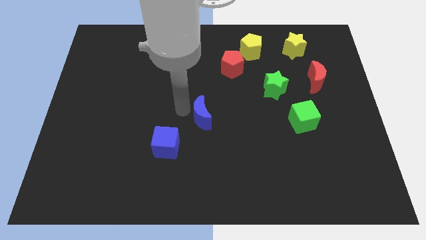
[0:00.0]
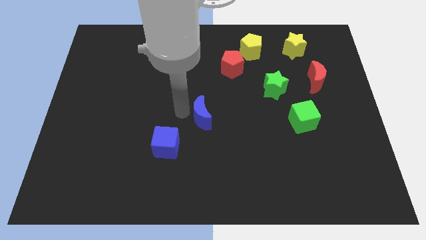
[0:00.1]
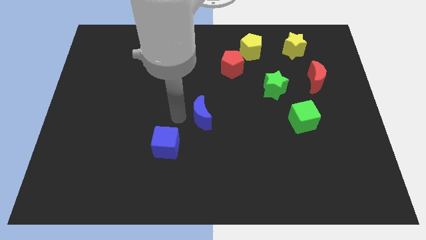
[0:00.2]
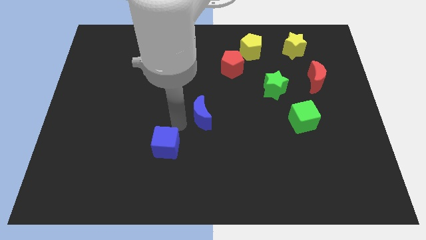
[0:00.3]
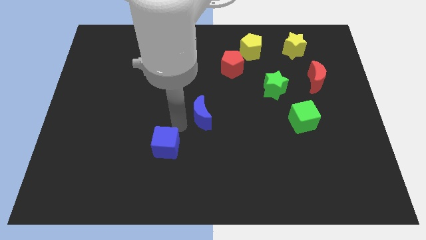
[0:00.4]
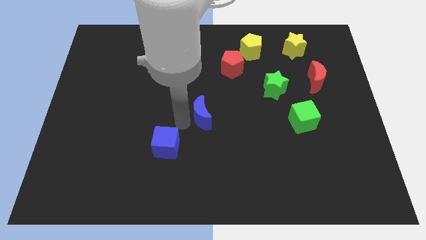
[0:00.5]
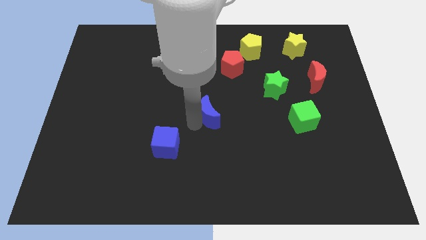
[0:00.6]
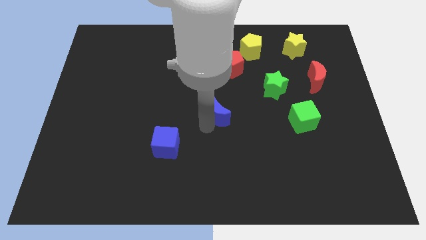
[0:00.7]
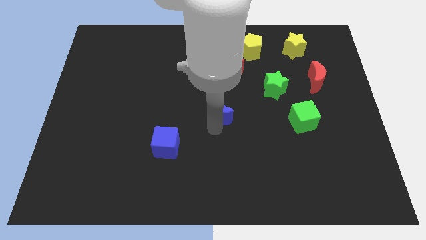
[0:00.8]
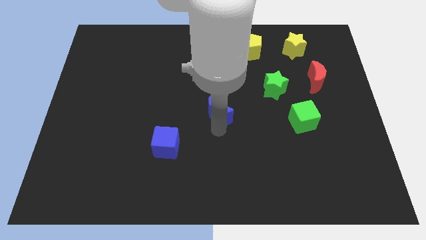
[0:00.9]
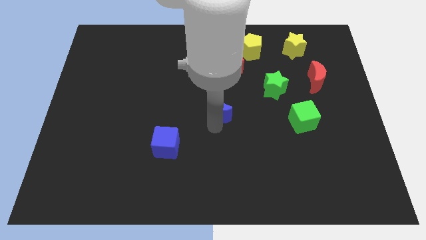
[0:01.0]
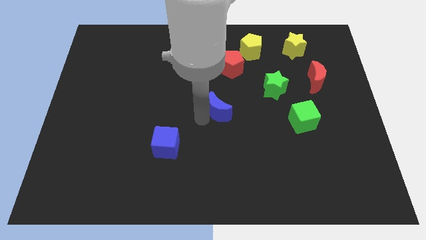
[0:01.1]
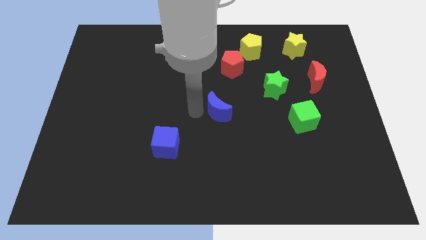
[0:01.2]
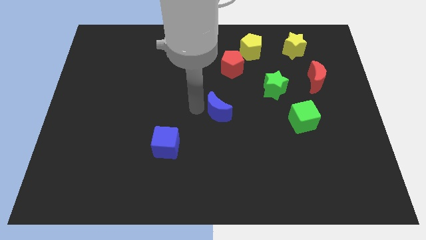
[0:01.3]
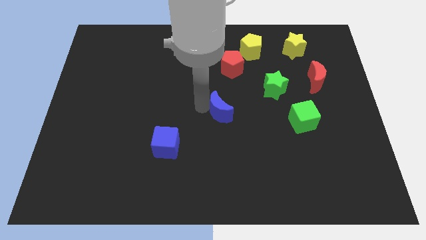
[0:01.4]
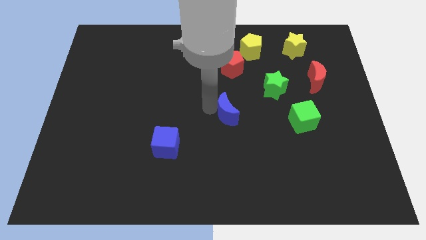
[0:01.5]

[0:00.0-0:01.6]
put the blue moon vertically below the red pentagon

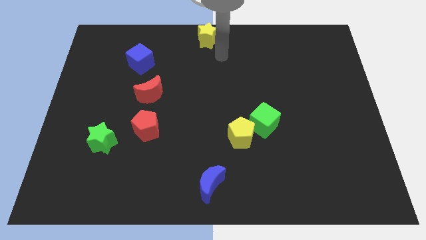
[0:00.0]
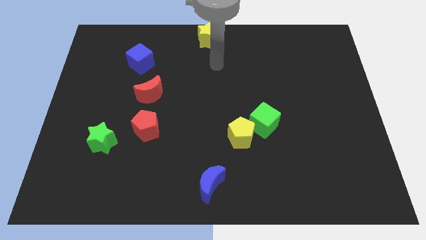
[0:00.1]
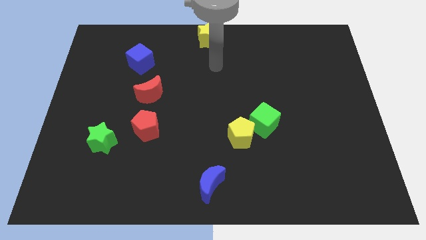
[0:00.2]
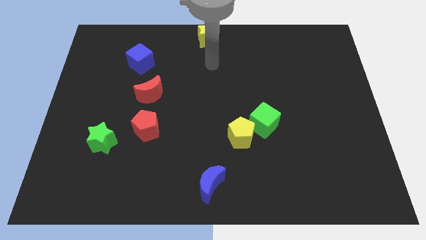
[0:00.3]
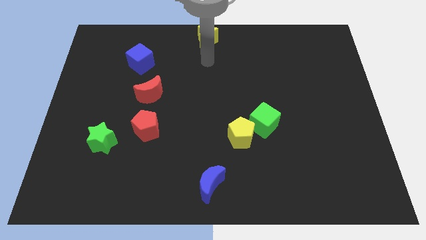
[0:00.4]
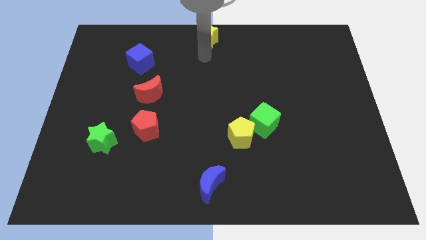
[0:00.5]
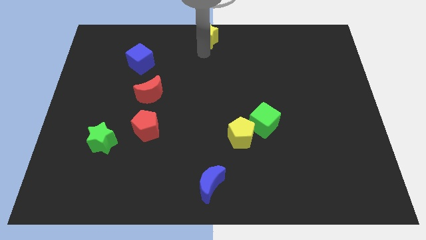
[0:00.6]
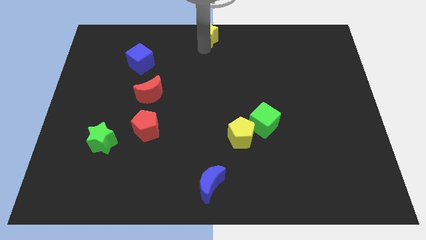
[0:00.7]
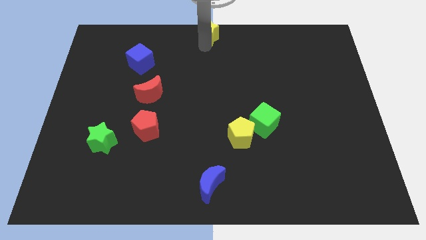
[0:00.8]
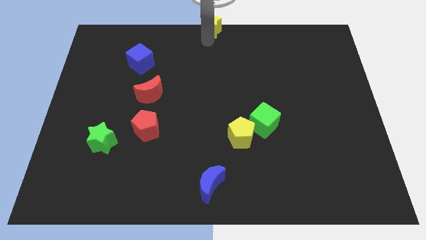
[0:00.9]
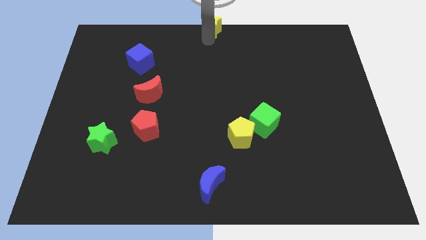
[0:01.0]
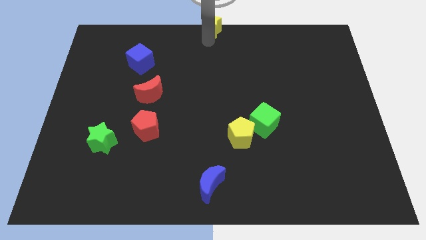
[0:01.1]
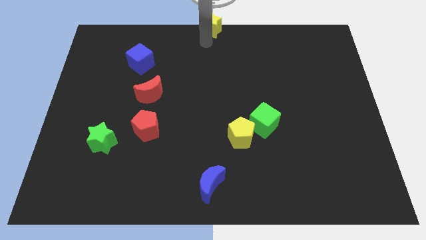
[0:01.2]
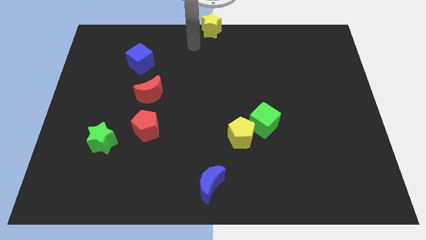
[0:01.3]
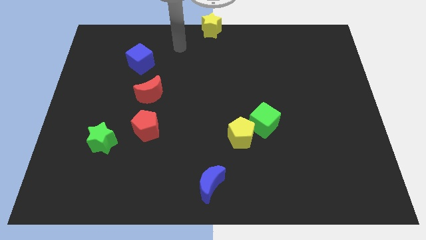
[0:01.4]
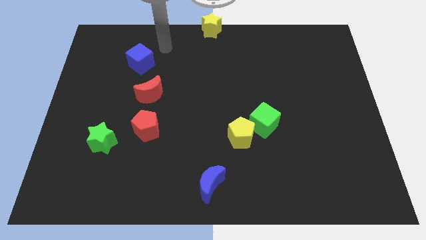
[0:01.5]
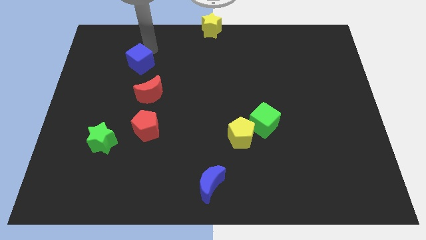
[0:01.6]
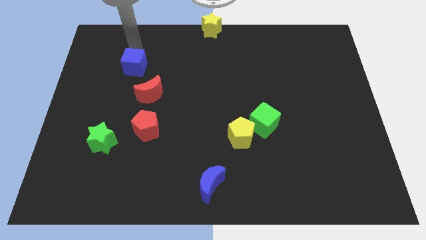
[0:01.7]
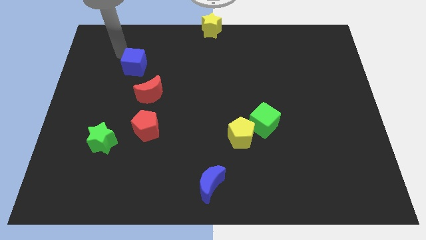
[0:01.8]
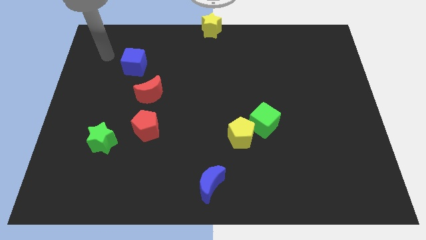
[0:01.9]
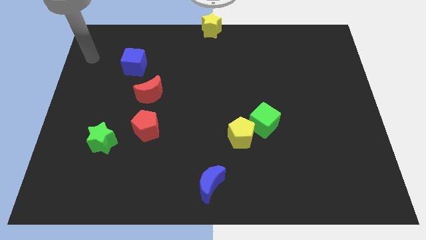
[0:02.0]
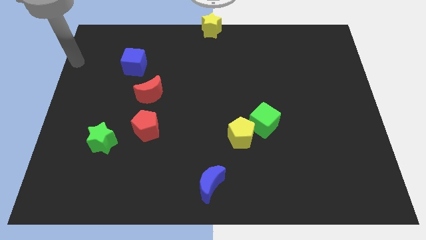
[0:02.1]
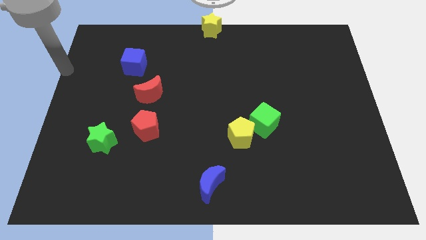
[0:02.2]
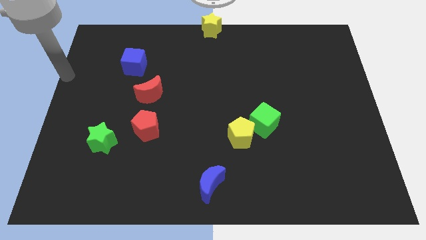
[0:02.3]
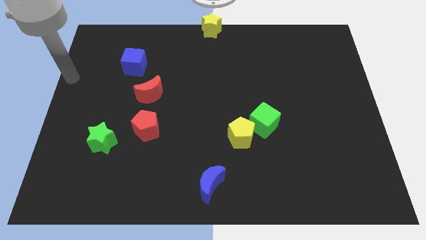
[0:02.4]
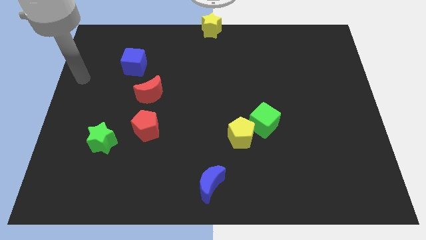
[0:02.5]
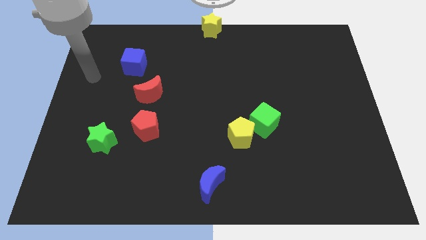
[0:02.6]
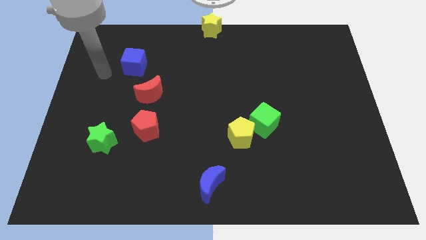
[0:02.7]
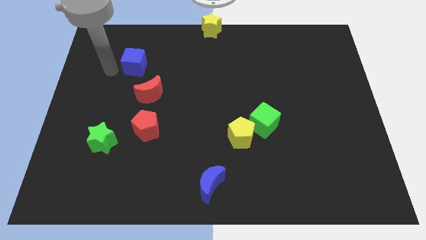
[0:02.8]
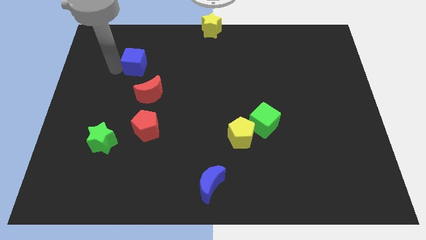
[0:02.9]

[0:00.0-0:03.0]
place the arm left to the blue cube

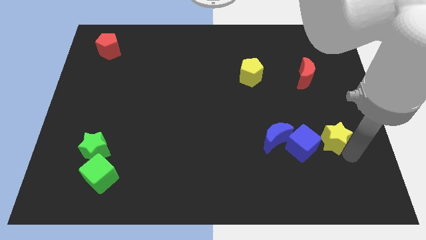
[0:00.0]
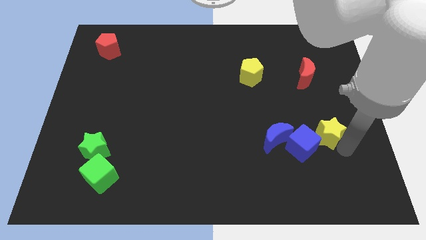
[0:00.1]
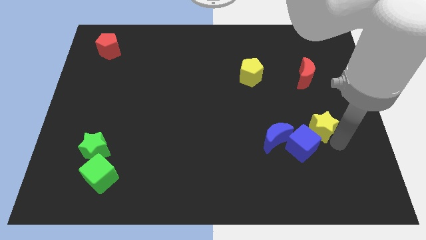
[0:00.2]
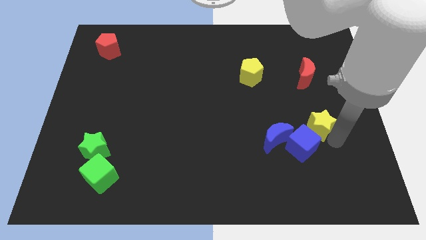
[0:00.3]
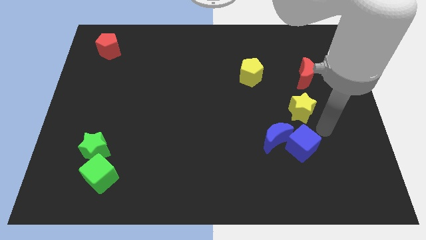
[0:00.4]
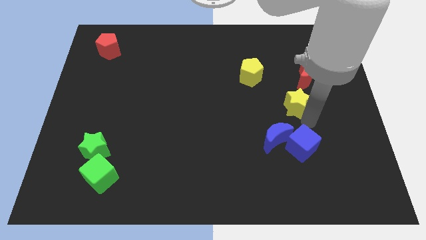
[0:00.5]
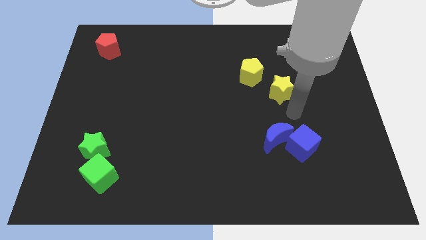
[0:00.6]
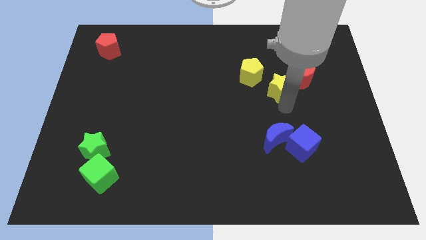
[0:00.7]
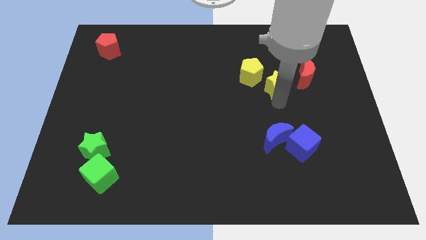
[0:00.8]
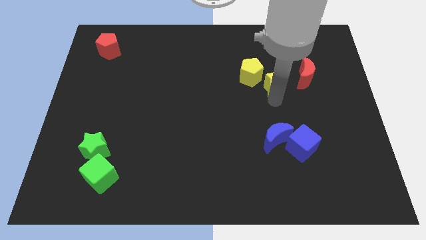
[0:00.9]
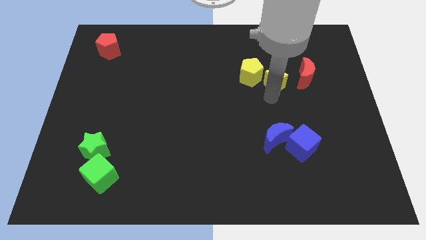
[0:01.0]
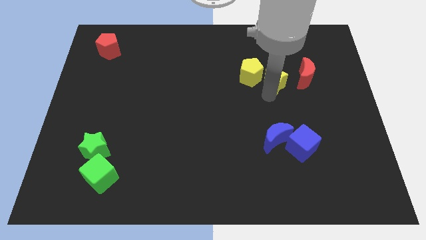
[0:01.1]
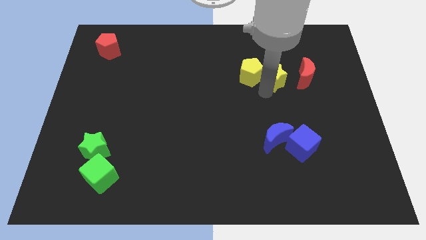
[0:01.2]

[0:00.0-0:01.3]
move the yellow star in between yellow pentagon and red crescent

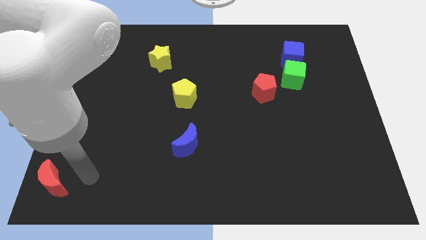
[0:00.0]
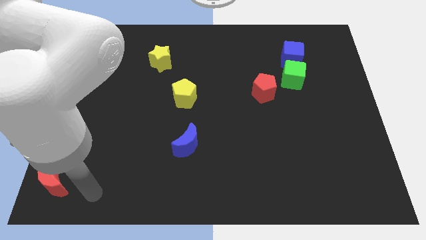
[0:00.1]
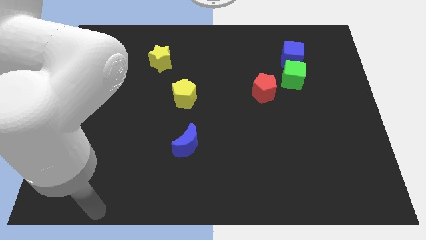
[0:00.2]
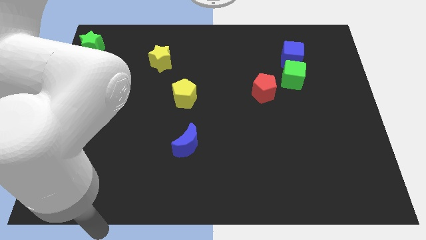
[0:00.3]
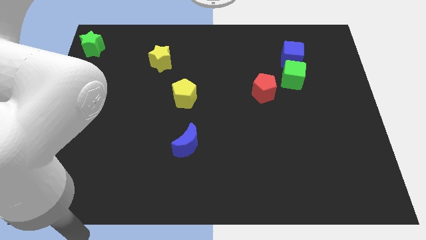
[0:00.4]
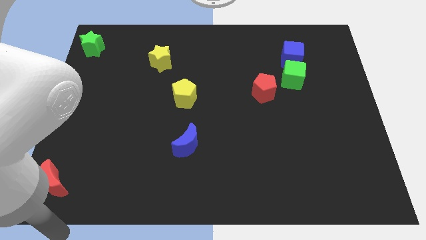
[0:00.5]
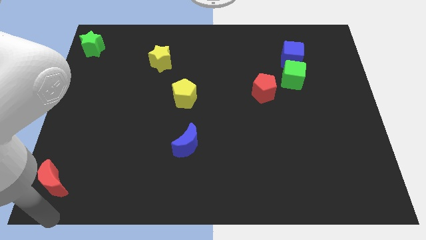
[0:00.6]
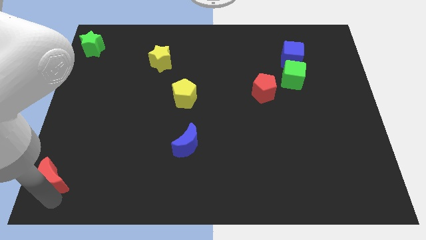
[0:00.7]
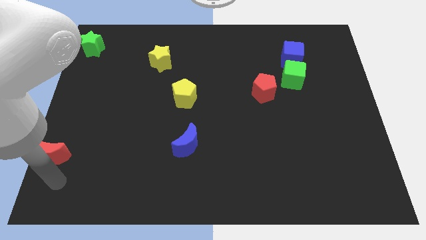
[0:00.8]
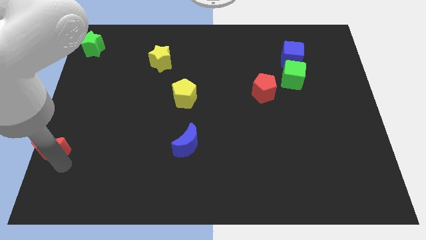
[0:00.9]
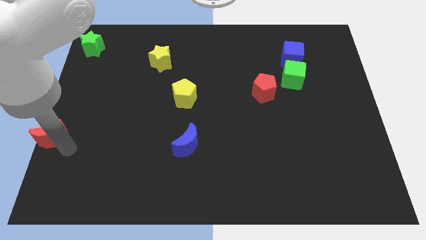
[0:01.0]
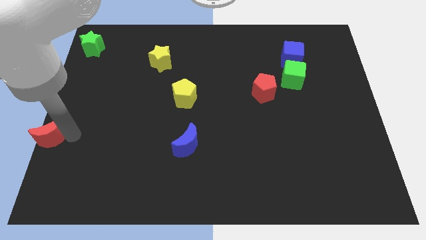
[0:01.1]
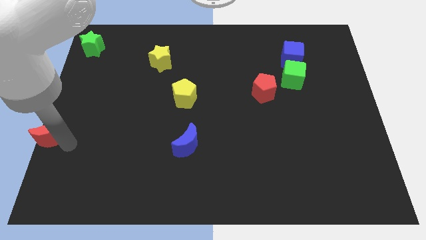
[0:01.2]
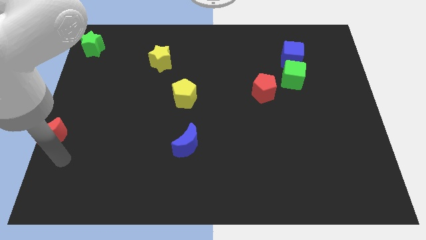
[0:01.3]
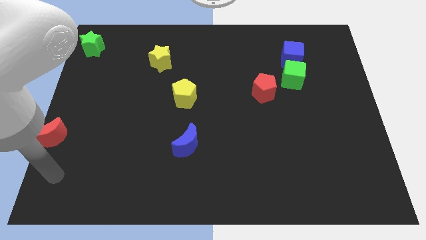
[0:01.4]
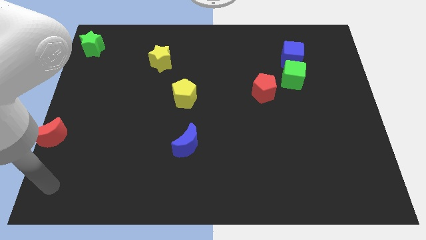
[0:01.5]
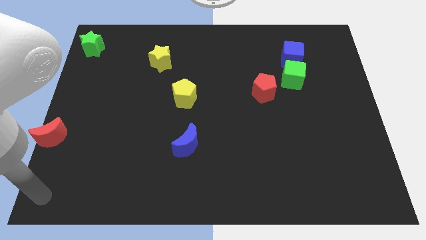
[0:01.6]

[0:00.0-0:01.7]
push the red moon to the bottom center left of the board

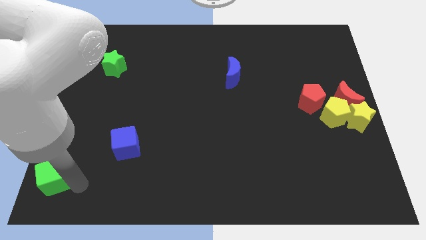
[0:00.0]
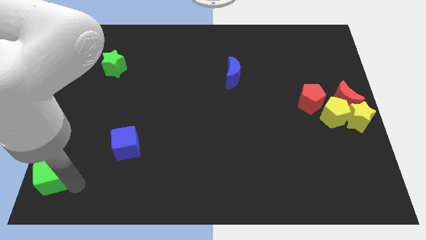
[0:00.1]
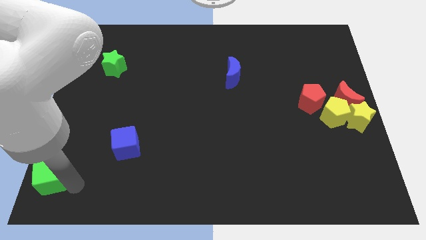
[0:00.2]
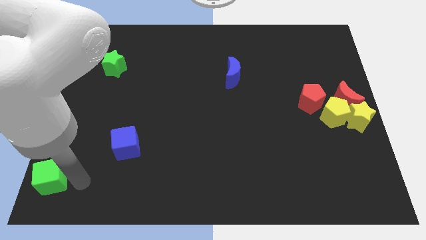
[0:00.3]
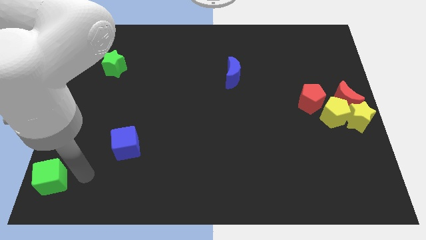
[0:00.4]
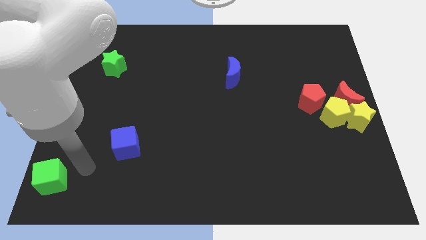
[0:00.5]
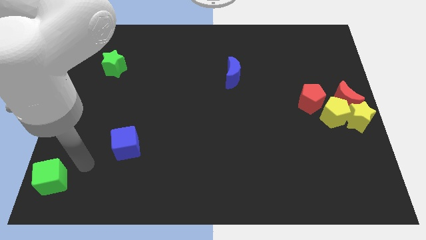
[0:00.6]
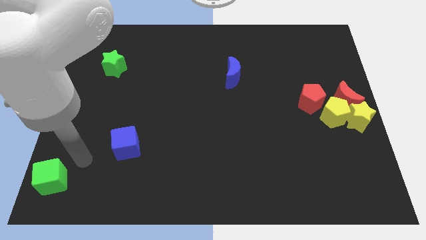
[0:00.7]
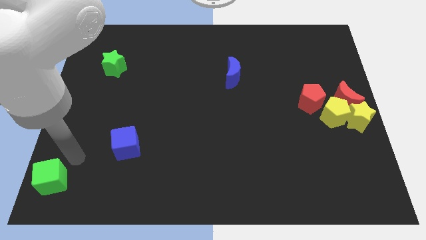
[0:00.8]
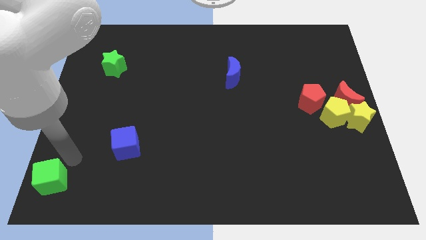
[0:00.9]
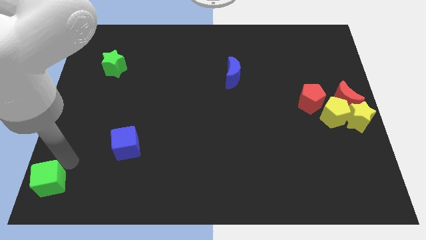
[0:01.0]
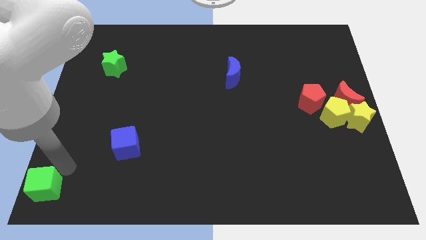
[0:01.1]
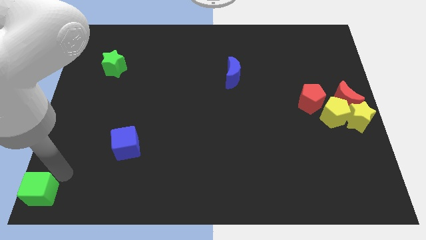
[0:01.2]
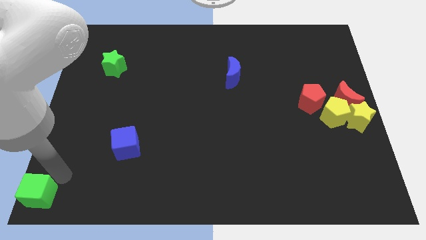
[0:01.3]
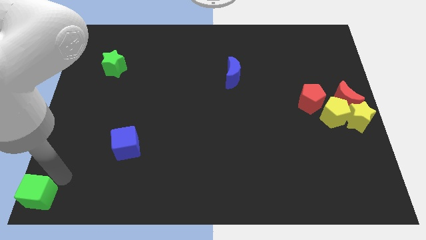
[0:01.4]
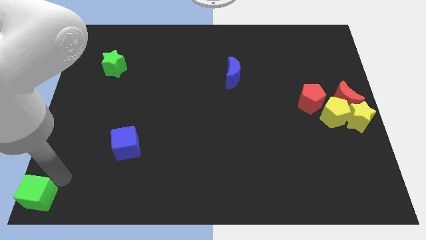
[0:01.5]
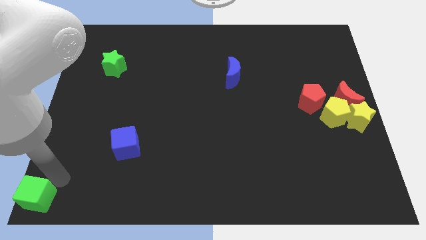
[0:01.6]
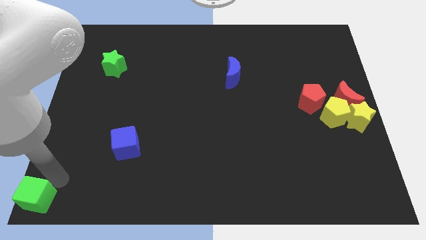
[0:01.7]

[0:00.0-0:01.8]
place the green cube to the bottom left corner
